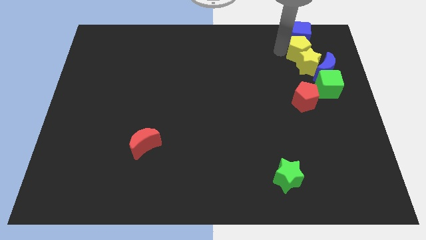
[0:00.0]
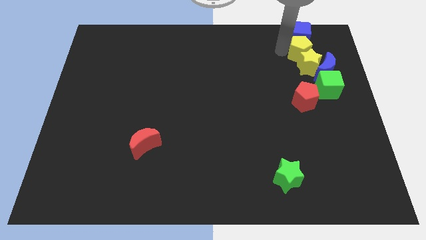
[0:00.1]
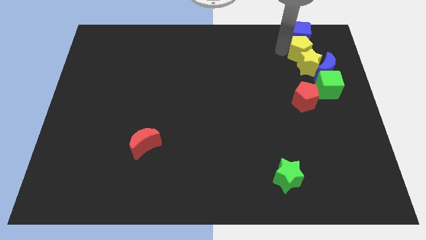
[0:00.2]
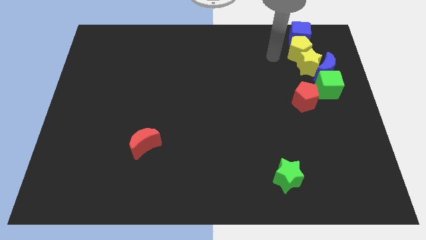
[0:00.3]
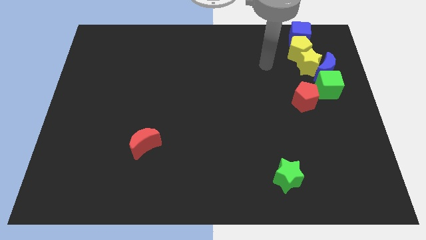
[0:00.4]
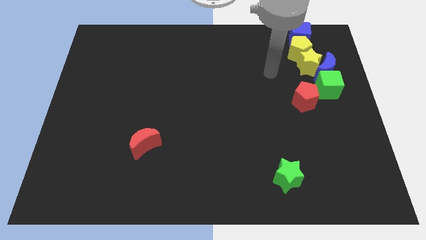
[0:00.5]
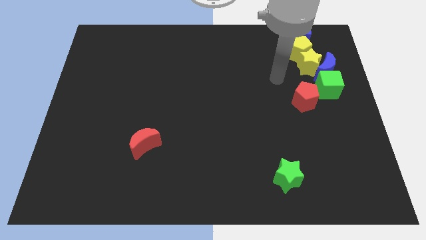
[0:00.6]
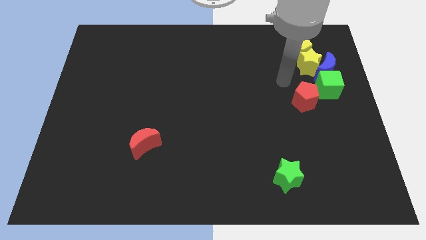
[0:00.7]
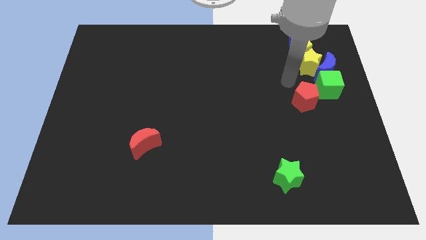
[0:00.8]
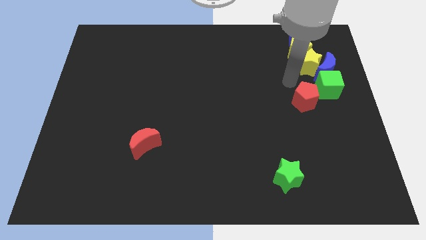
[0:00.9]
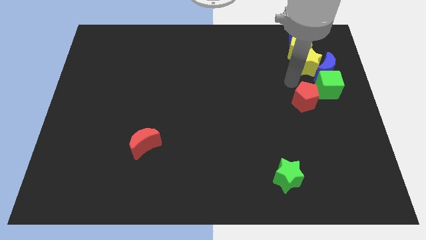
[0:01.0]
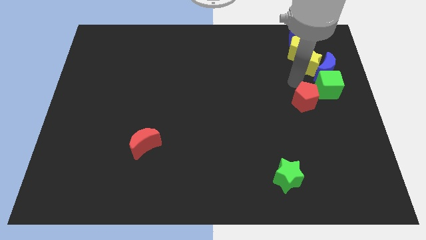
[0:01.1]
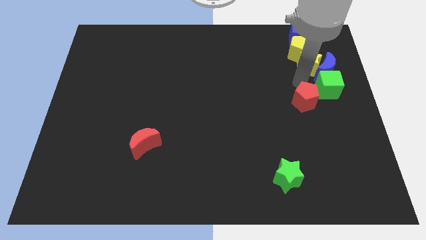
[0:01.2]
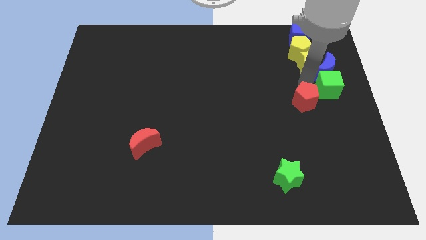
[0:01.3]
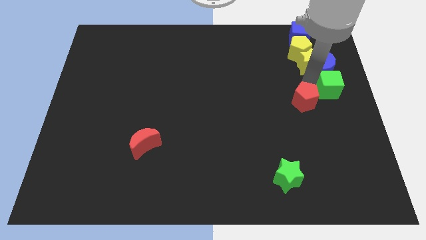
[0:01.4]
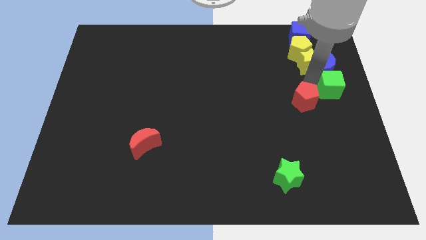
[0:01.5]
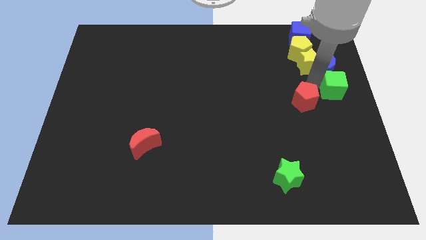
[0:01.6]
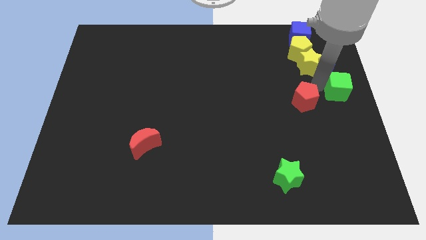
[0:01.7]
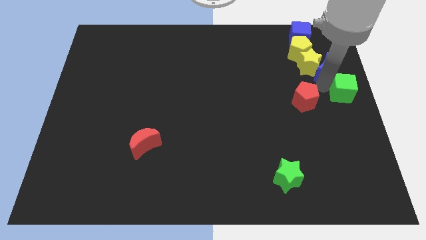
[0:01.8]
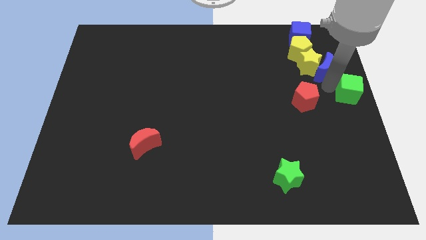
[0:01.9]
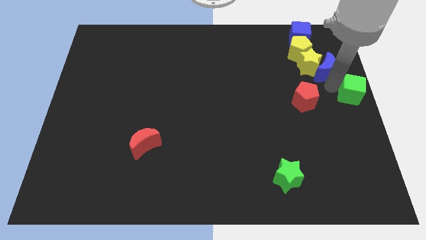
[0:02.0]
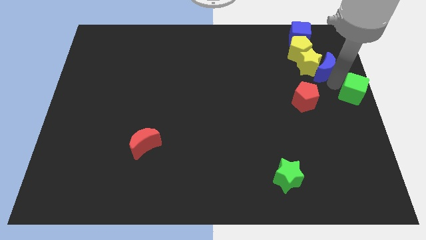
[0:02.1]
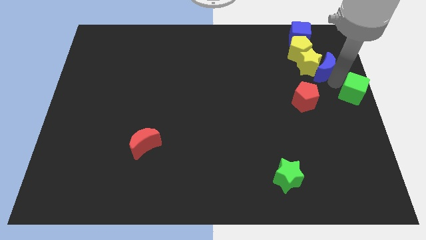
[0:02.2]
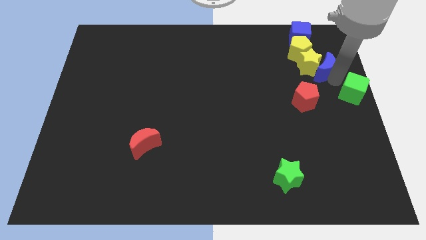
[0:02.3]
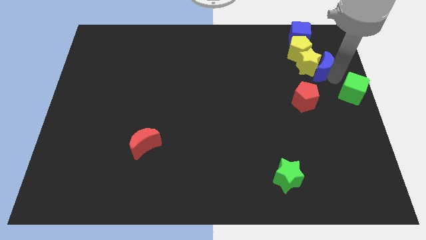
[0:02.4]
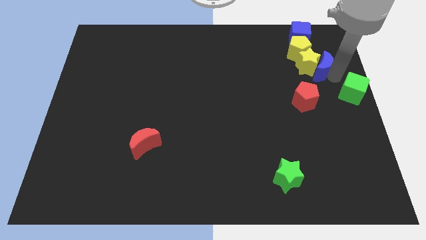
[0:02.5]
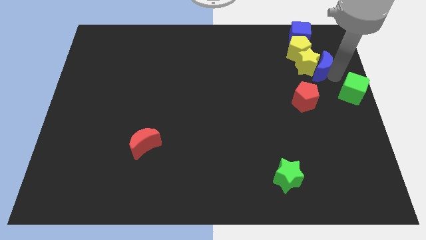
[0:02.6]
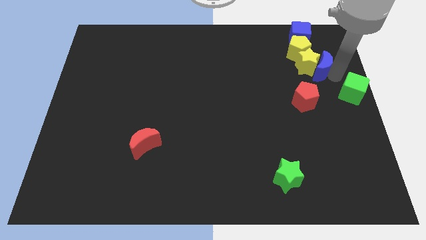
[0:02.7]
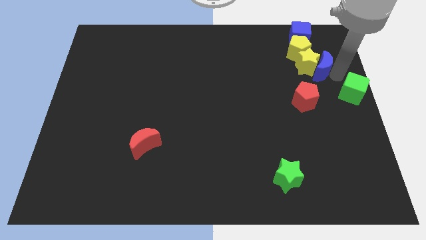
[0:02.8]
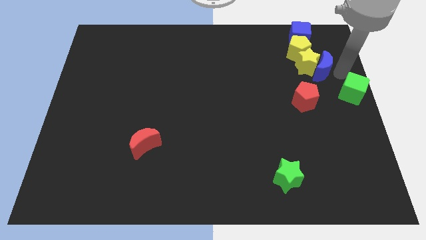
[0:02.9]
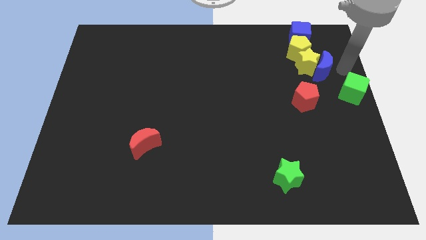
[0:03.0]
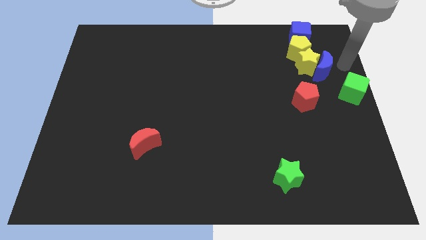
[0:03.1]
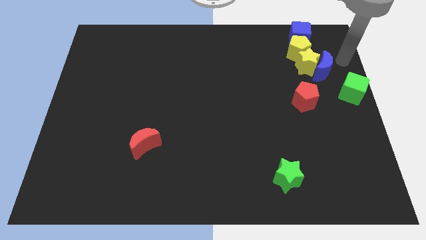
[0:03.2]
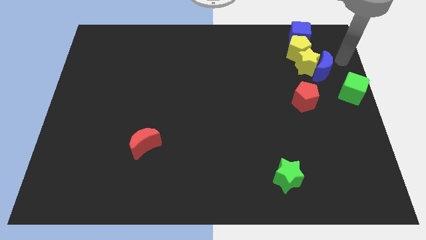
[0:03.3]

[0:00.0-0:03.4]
move the green cube away from the blue crescent

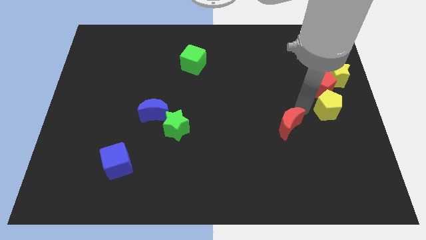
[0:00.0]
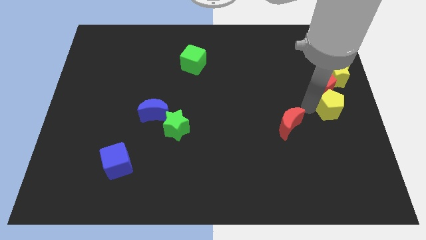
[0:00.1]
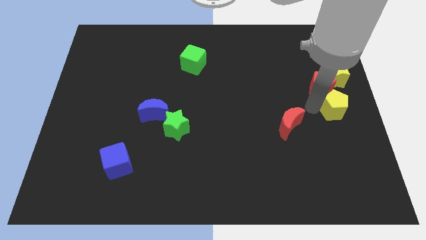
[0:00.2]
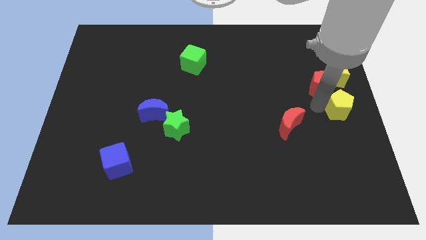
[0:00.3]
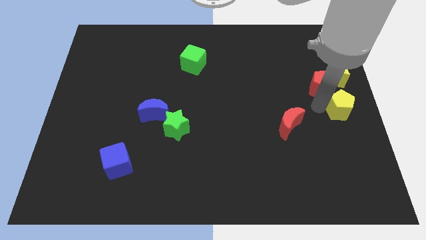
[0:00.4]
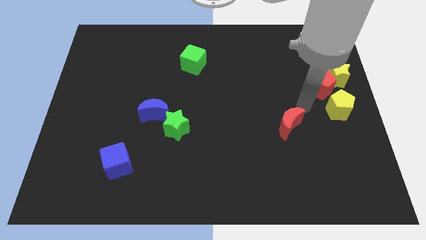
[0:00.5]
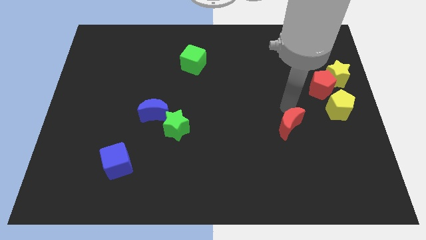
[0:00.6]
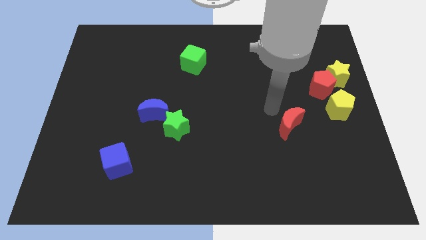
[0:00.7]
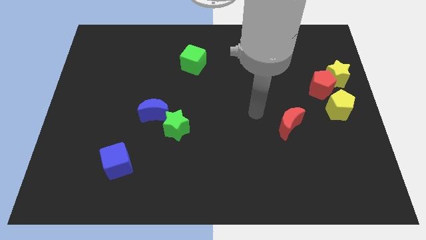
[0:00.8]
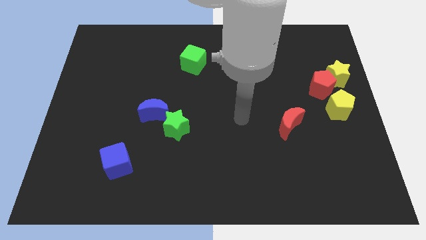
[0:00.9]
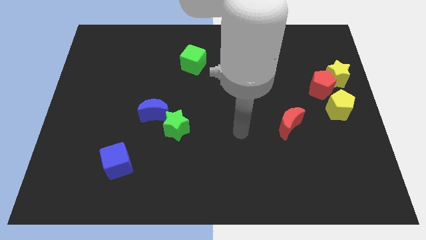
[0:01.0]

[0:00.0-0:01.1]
push the yellow pentagon towards the center right of the board

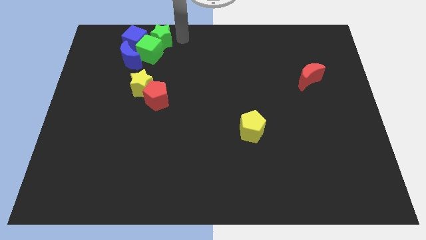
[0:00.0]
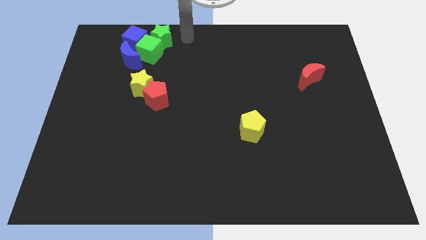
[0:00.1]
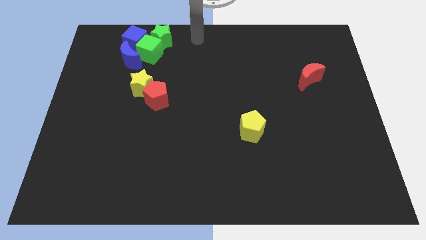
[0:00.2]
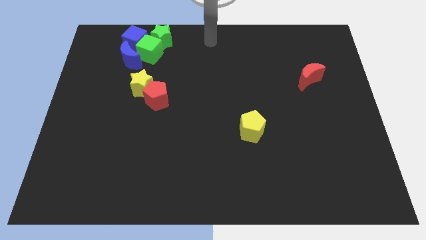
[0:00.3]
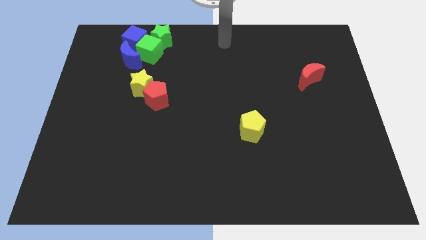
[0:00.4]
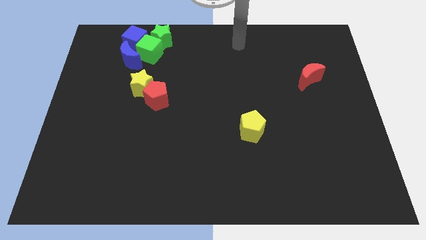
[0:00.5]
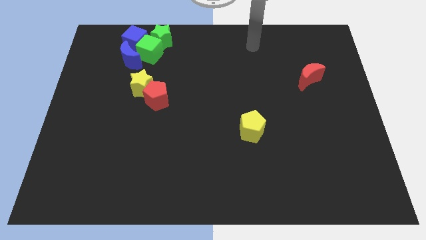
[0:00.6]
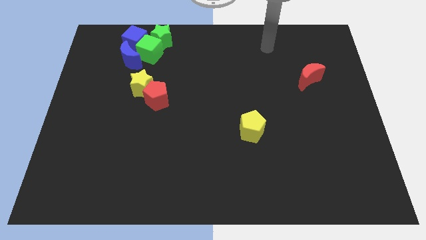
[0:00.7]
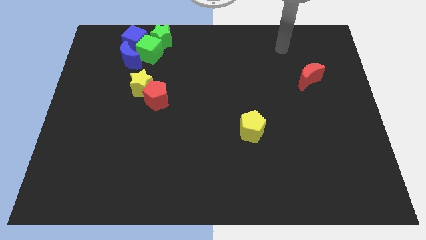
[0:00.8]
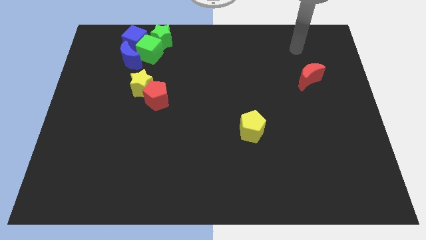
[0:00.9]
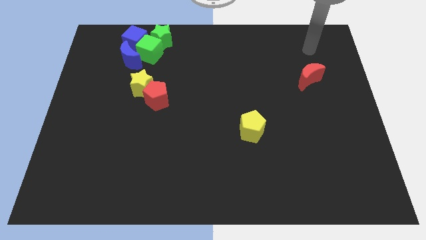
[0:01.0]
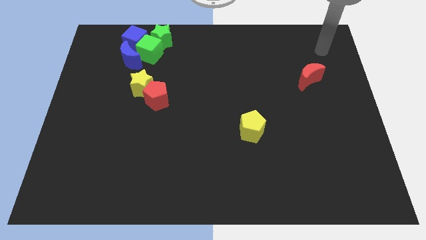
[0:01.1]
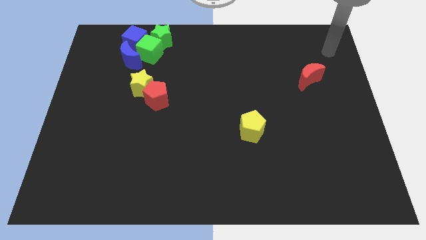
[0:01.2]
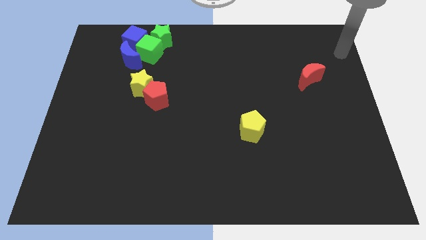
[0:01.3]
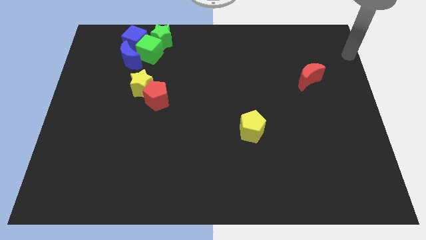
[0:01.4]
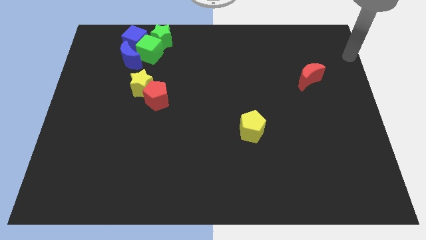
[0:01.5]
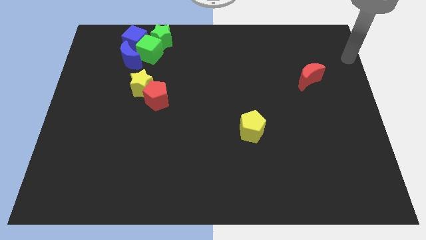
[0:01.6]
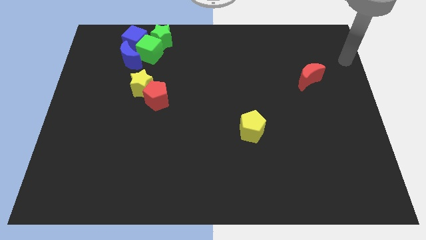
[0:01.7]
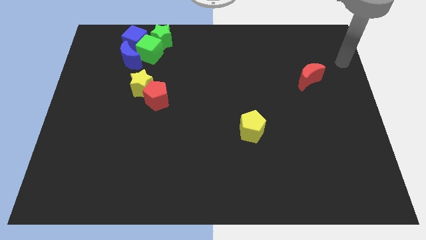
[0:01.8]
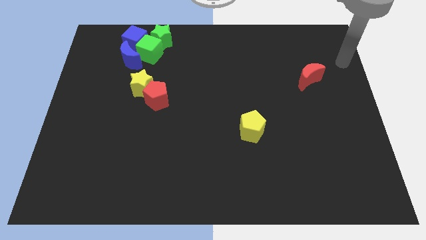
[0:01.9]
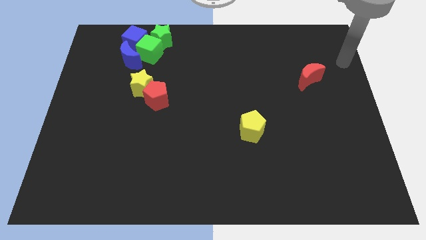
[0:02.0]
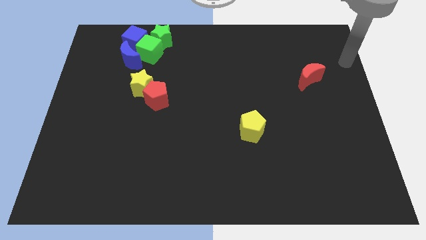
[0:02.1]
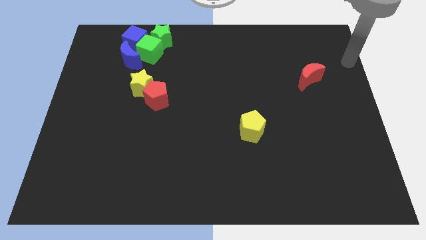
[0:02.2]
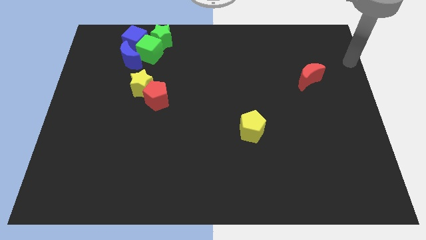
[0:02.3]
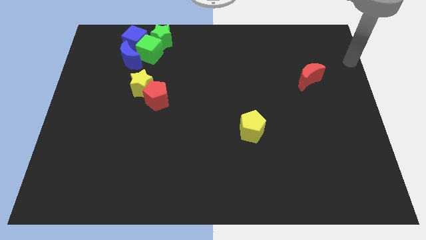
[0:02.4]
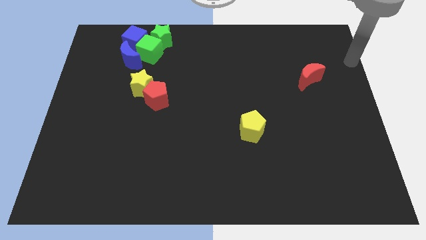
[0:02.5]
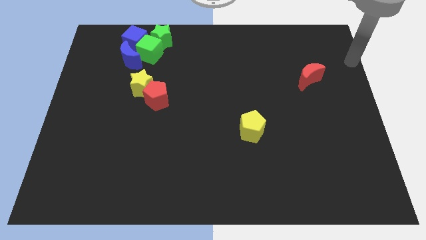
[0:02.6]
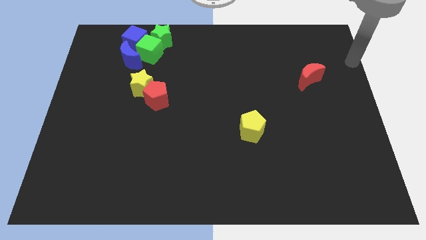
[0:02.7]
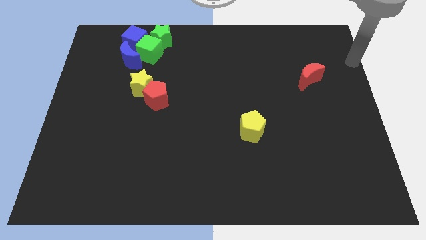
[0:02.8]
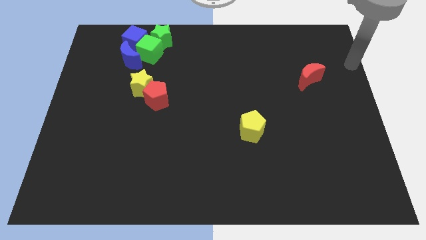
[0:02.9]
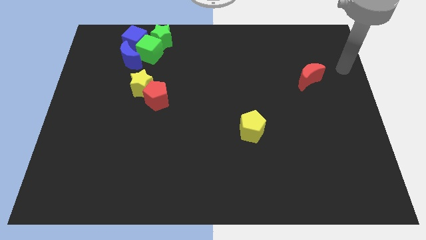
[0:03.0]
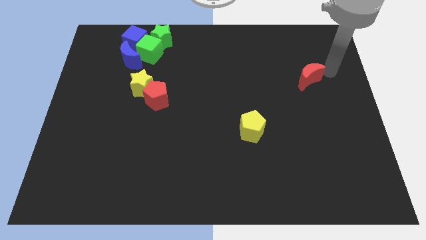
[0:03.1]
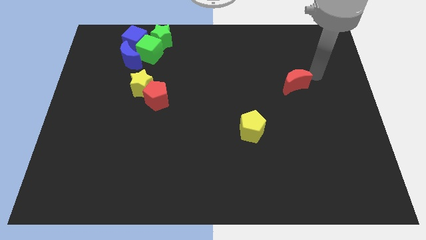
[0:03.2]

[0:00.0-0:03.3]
move the arm around the red moon

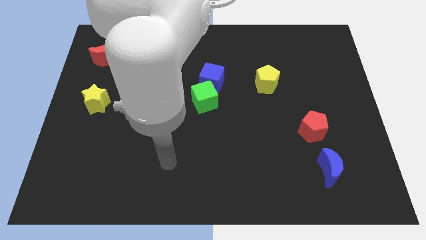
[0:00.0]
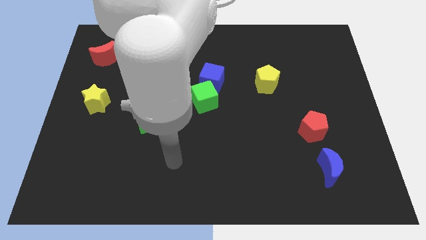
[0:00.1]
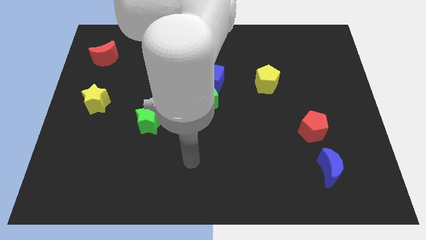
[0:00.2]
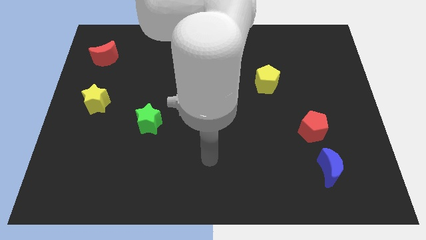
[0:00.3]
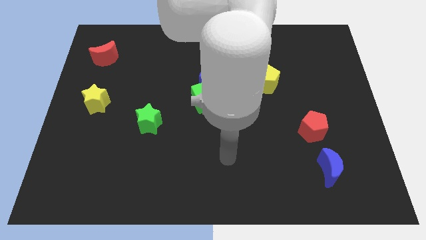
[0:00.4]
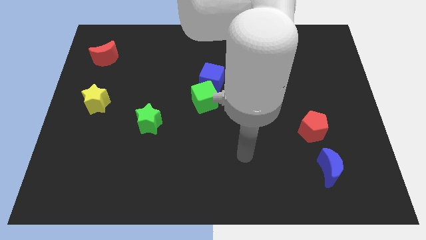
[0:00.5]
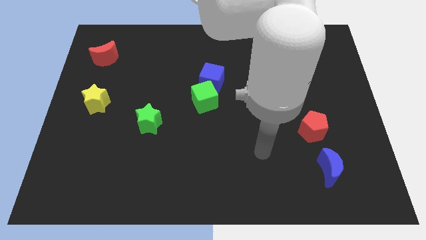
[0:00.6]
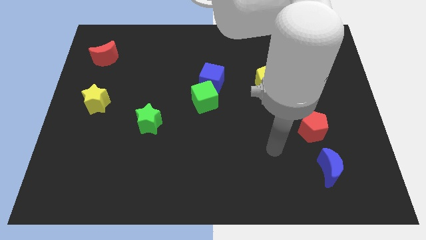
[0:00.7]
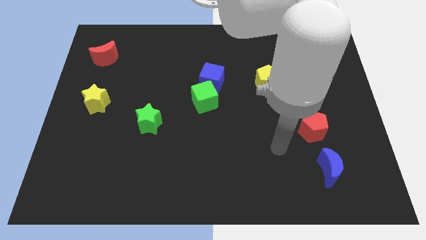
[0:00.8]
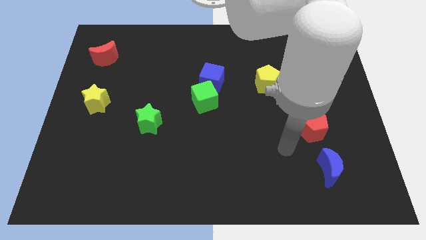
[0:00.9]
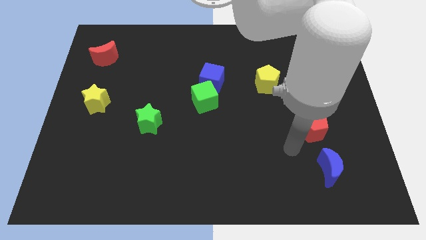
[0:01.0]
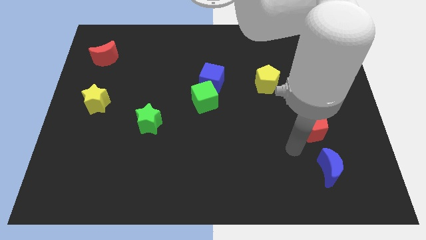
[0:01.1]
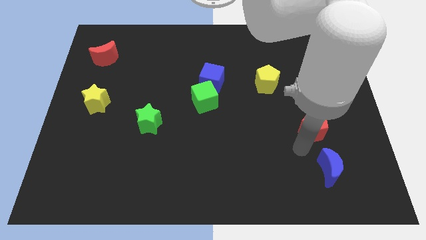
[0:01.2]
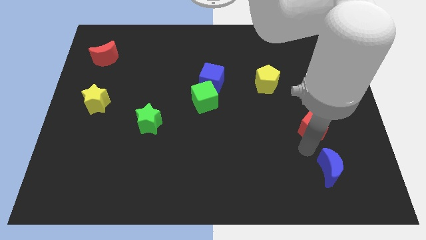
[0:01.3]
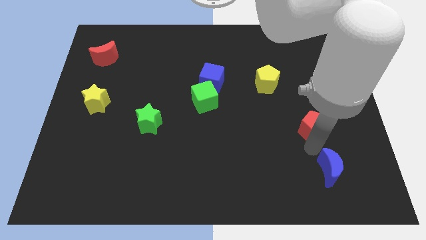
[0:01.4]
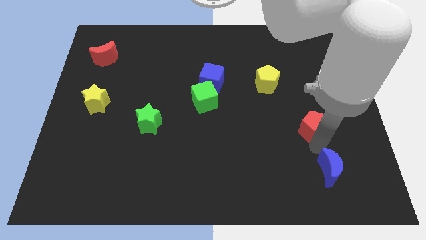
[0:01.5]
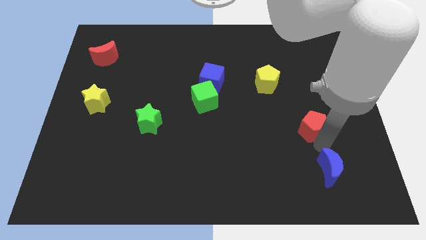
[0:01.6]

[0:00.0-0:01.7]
place your arm in between the blue crescent and red pentagon
